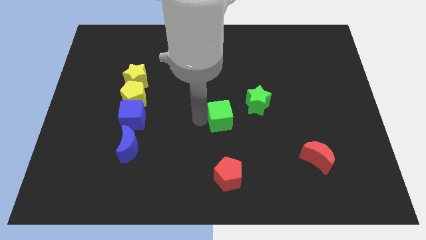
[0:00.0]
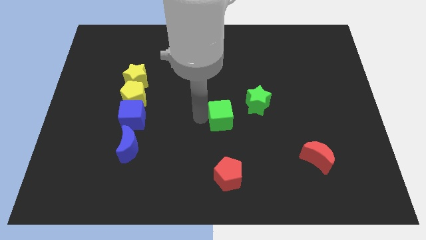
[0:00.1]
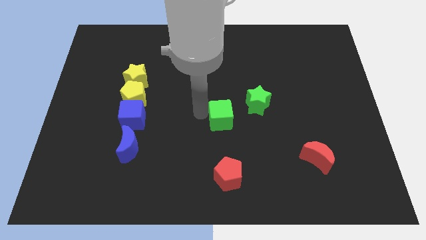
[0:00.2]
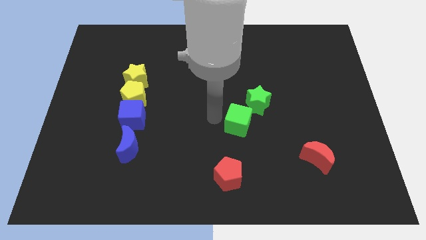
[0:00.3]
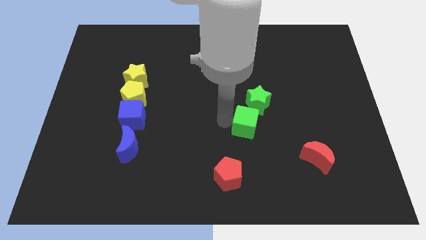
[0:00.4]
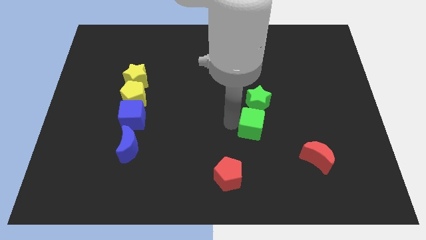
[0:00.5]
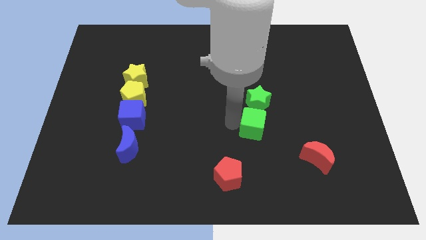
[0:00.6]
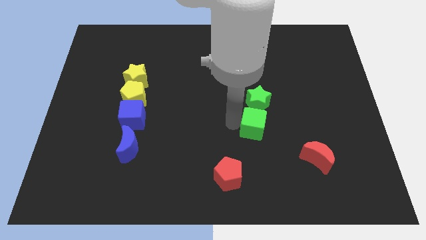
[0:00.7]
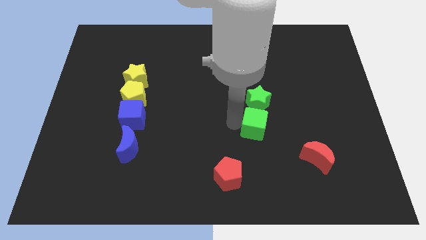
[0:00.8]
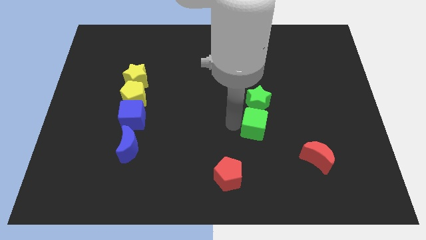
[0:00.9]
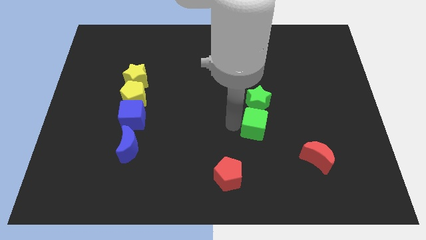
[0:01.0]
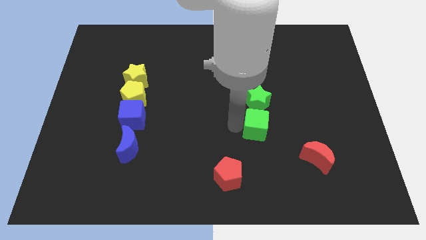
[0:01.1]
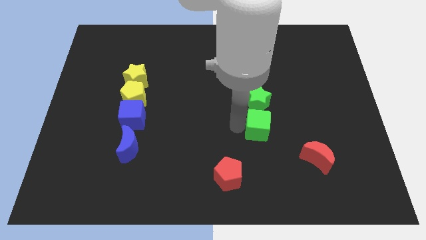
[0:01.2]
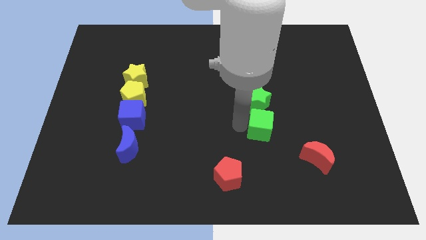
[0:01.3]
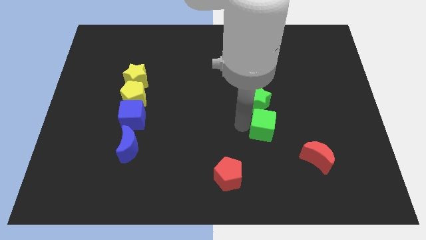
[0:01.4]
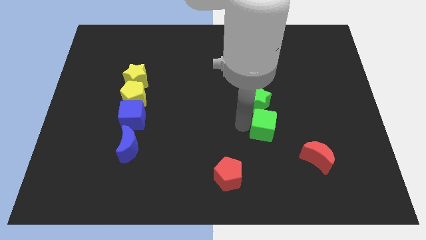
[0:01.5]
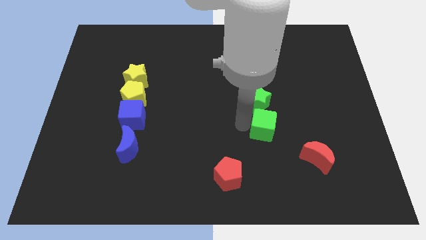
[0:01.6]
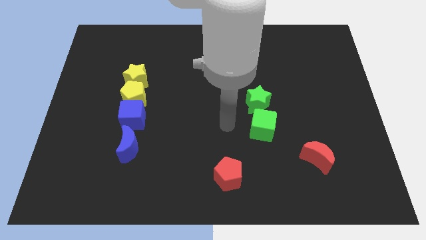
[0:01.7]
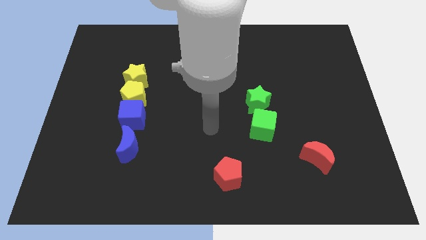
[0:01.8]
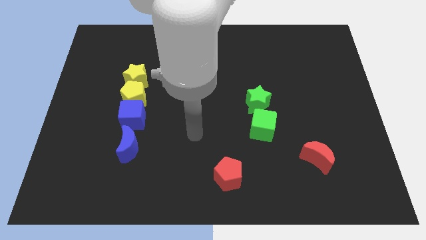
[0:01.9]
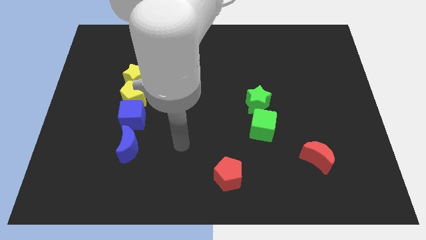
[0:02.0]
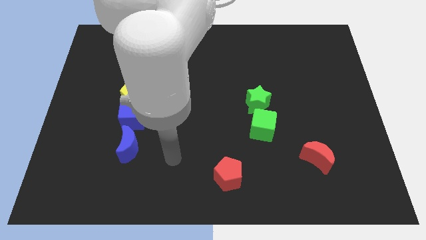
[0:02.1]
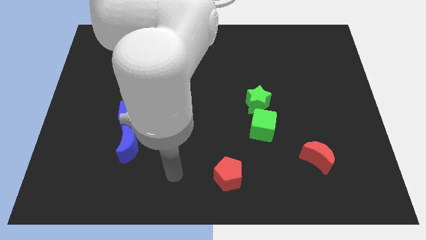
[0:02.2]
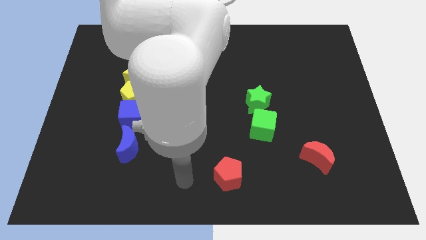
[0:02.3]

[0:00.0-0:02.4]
push the green cube below to the green star

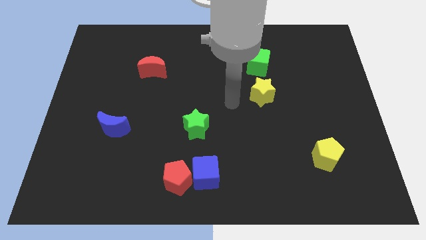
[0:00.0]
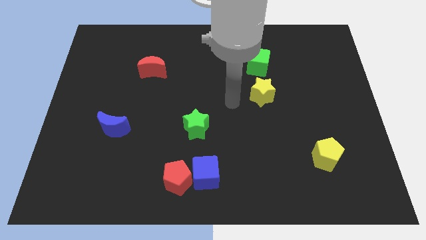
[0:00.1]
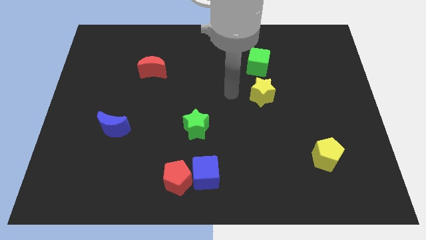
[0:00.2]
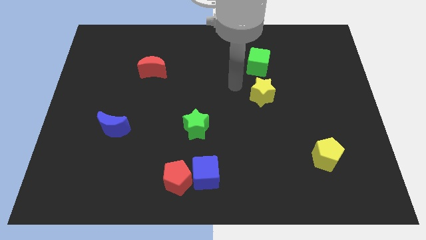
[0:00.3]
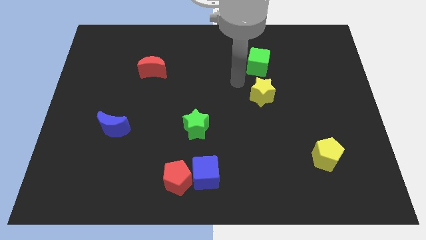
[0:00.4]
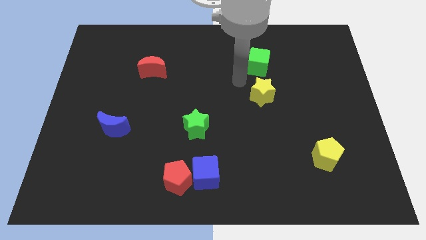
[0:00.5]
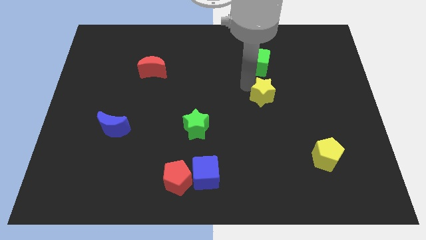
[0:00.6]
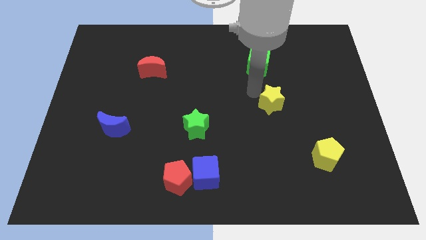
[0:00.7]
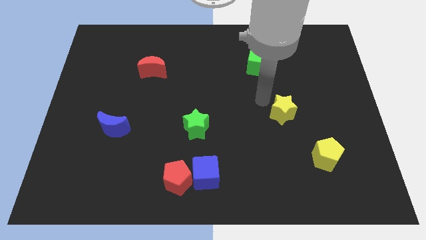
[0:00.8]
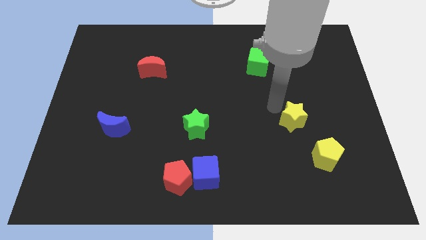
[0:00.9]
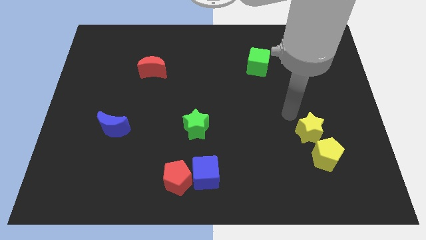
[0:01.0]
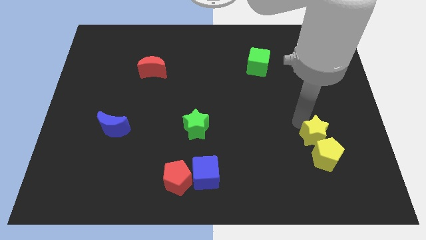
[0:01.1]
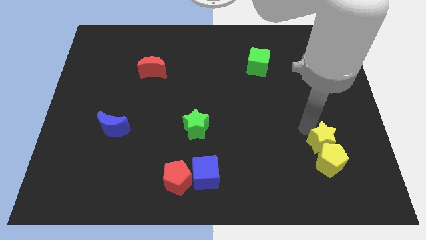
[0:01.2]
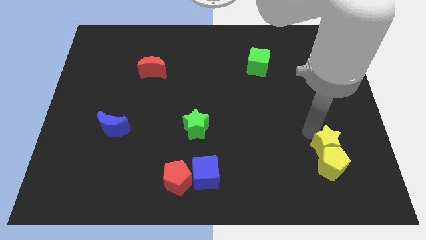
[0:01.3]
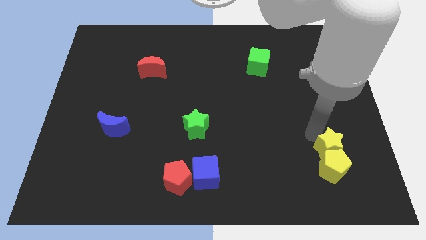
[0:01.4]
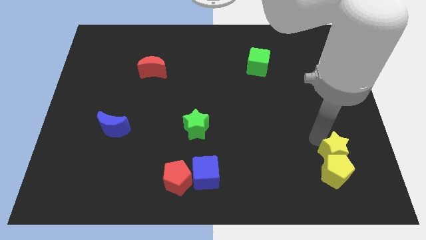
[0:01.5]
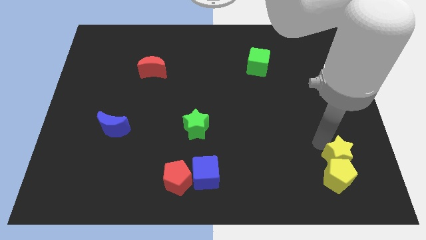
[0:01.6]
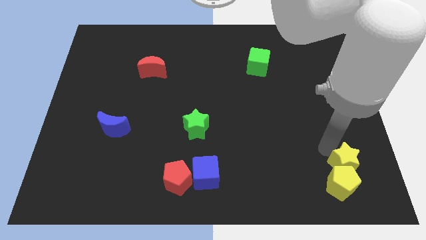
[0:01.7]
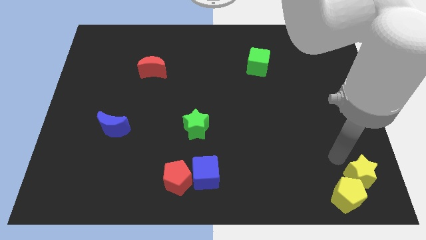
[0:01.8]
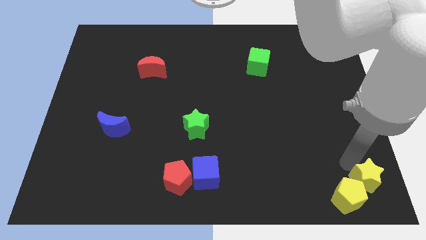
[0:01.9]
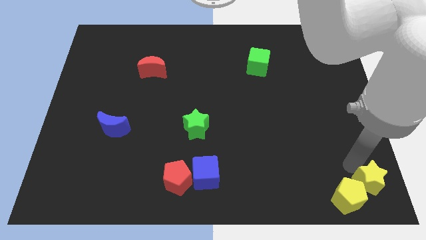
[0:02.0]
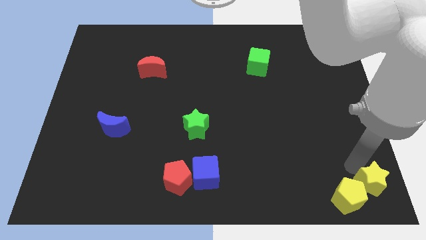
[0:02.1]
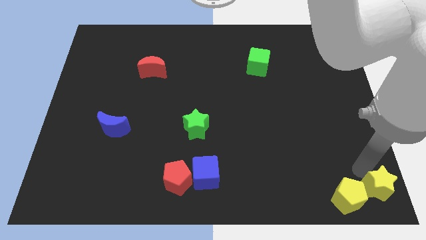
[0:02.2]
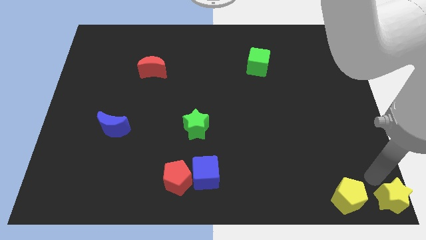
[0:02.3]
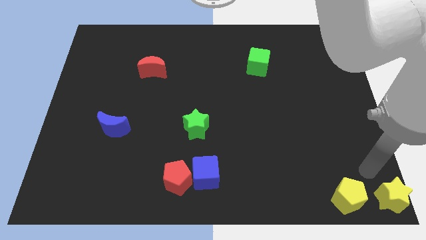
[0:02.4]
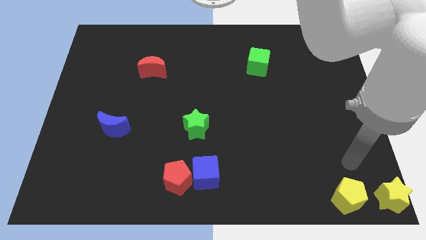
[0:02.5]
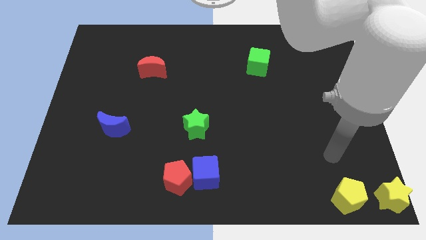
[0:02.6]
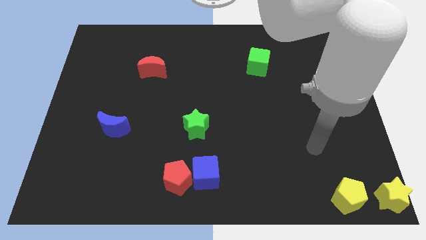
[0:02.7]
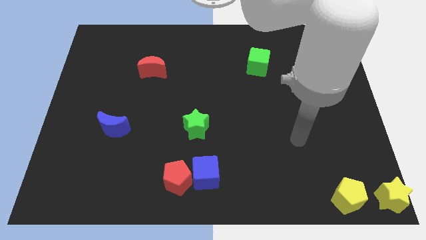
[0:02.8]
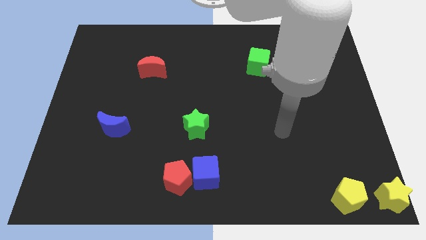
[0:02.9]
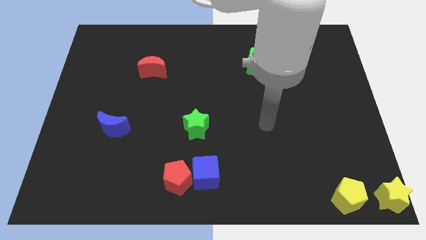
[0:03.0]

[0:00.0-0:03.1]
move the yellow star and the yellow pentagon towards the bottom right corner of the board

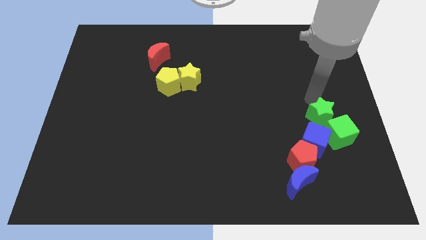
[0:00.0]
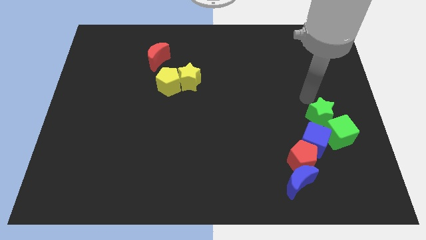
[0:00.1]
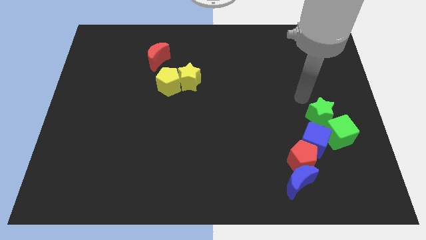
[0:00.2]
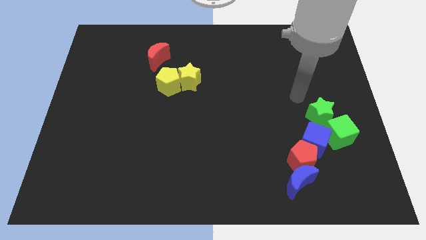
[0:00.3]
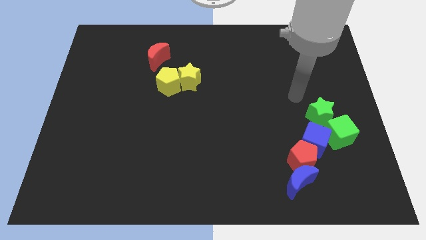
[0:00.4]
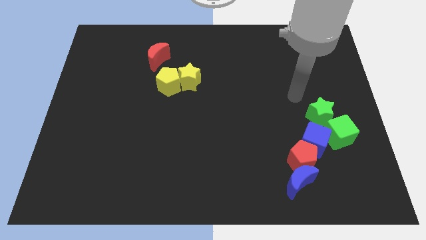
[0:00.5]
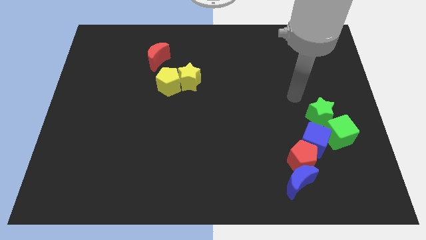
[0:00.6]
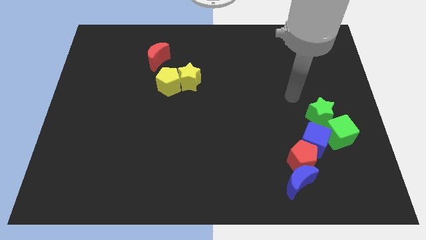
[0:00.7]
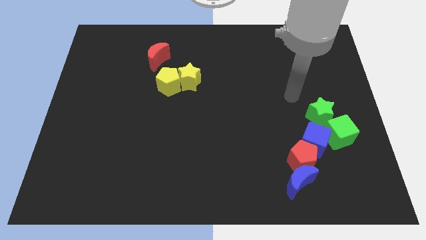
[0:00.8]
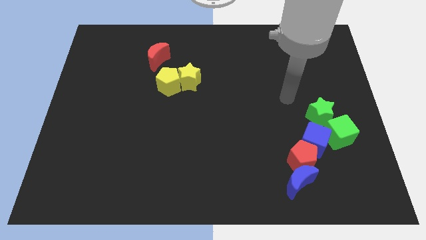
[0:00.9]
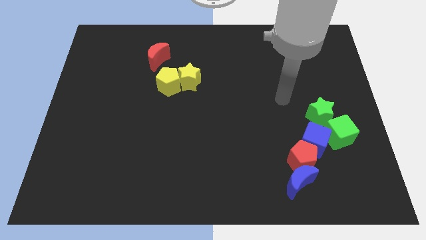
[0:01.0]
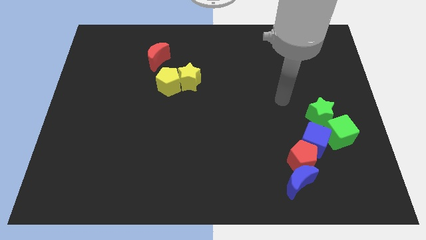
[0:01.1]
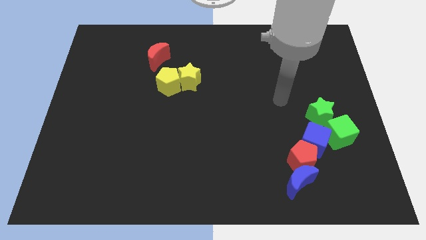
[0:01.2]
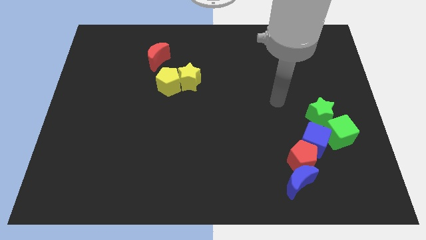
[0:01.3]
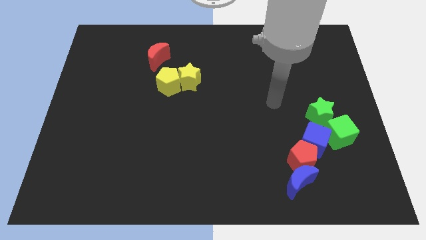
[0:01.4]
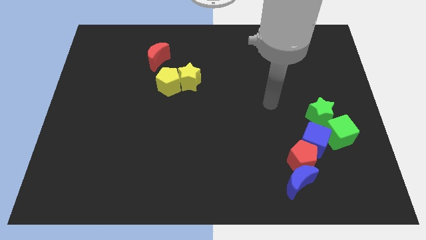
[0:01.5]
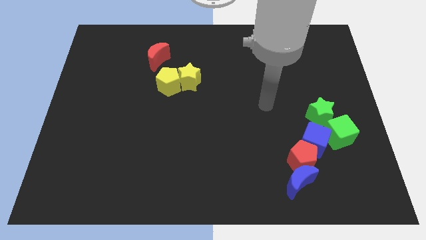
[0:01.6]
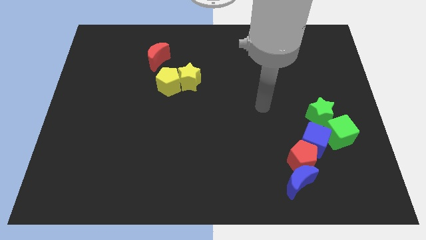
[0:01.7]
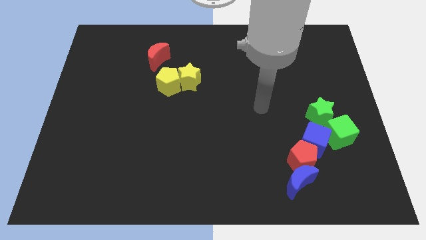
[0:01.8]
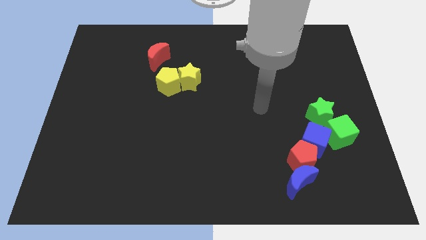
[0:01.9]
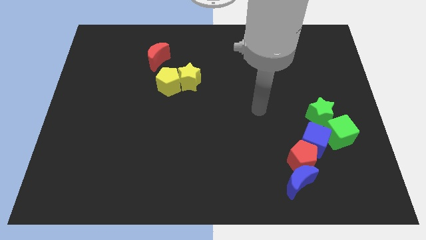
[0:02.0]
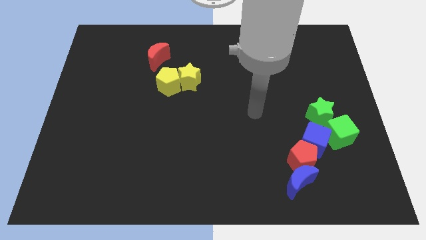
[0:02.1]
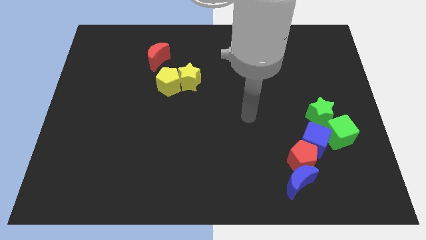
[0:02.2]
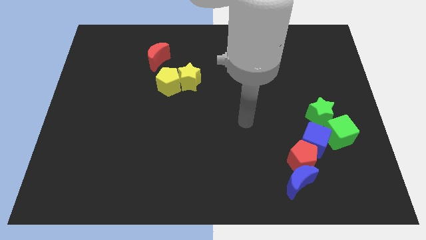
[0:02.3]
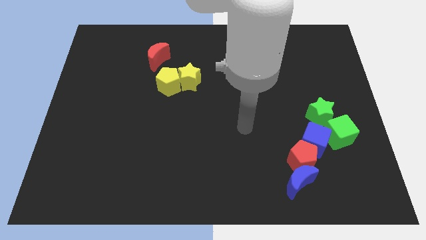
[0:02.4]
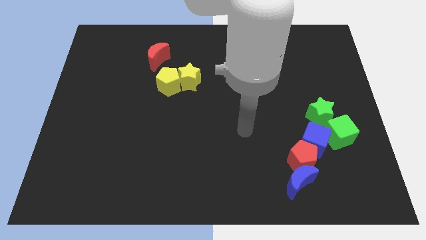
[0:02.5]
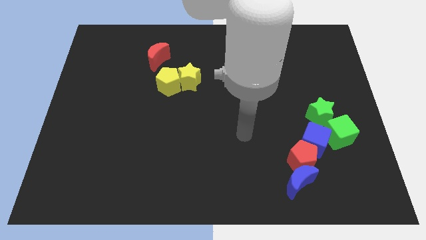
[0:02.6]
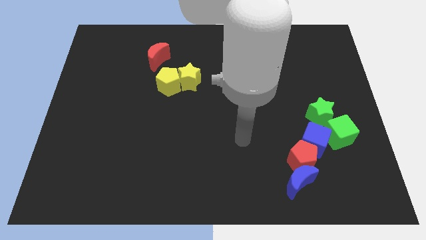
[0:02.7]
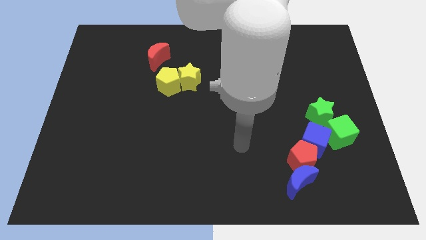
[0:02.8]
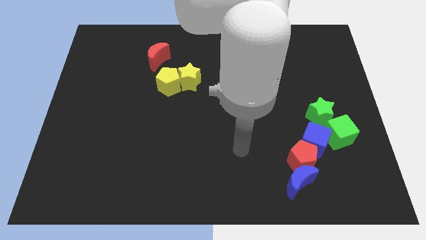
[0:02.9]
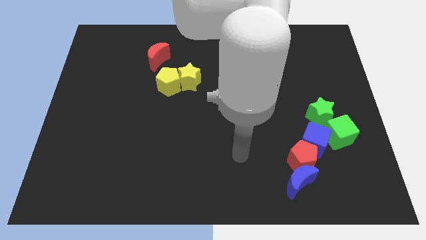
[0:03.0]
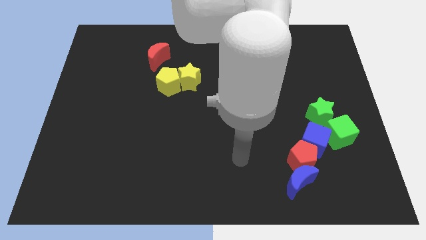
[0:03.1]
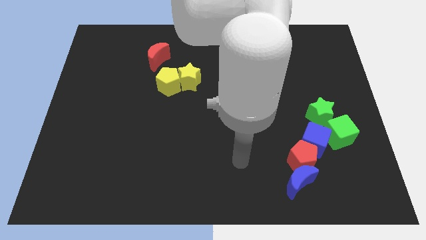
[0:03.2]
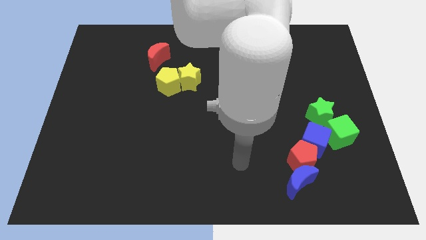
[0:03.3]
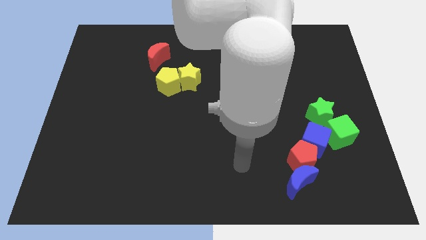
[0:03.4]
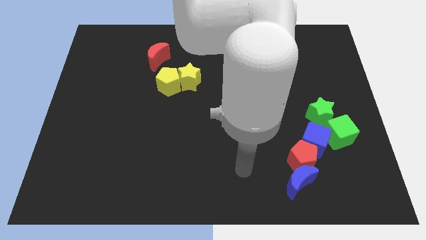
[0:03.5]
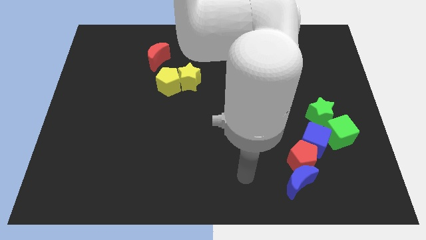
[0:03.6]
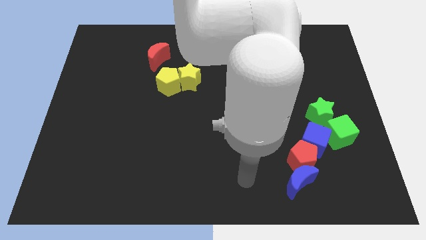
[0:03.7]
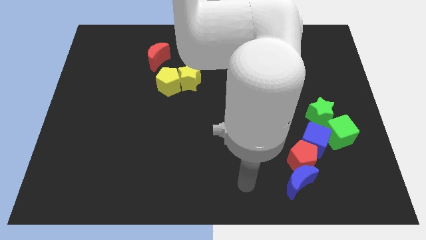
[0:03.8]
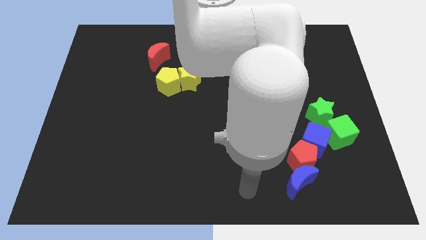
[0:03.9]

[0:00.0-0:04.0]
point your arm at the left of the blue crescent
